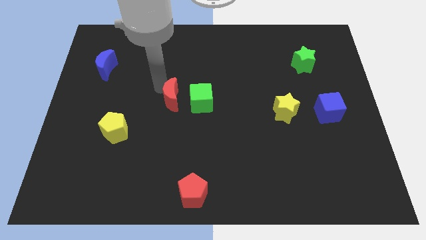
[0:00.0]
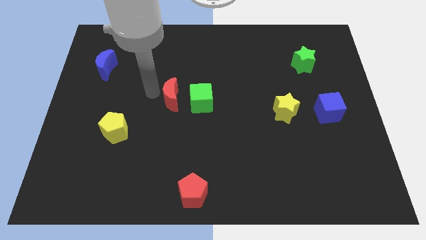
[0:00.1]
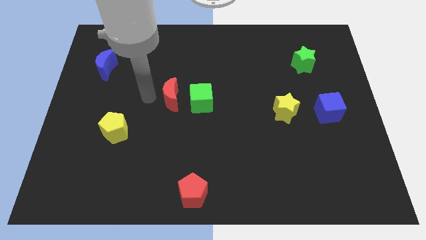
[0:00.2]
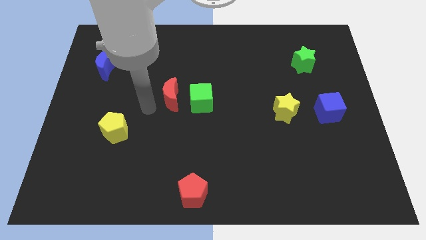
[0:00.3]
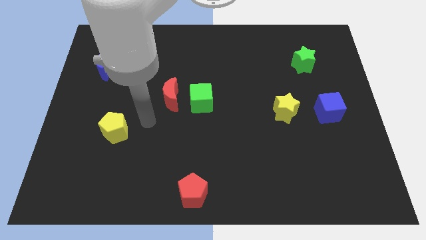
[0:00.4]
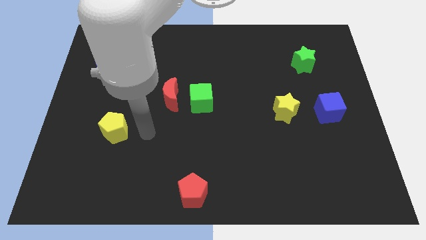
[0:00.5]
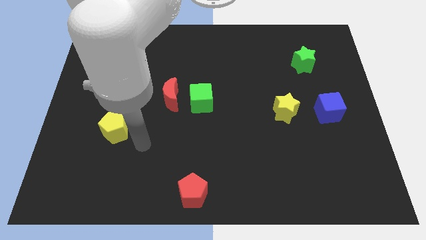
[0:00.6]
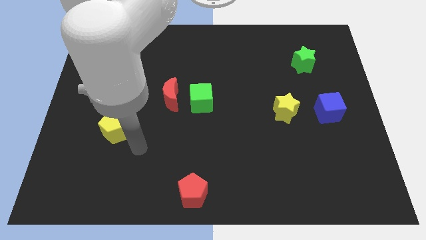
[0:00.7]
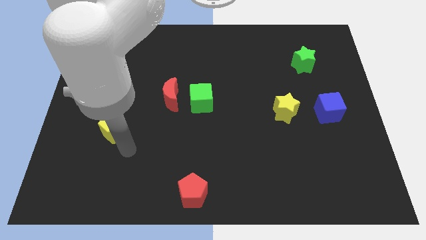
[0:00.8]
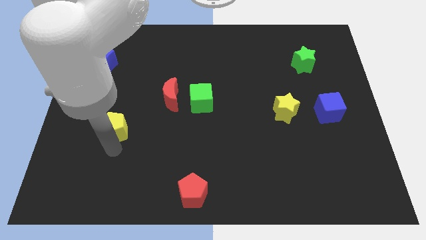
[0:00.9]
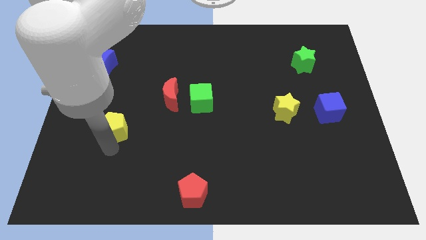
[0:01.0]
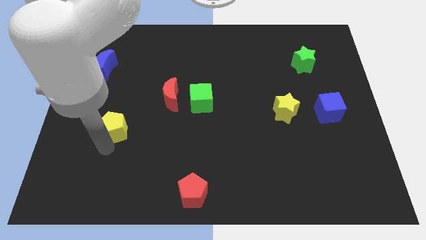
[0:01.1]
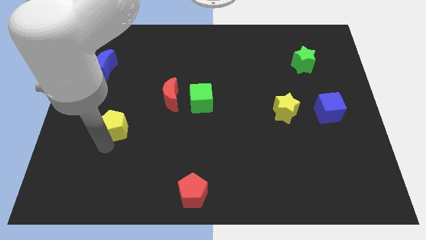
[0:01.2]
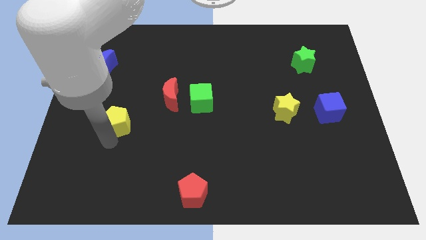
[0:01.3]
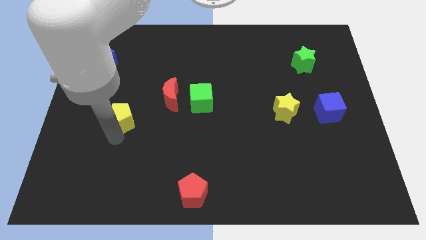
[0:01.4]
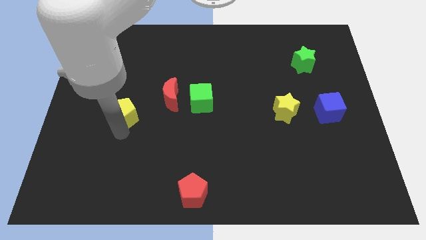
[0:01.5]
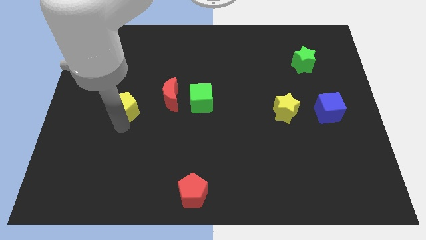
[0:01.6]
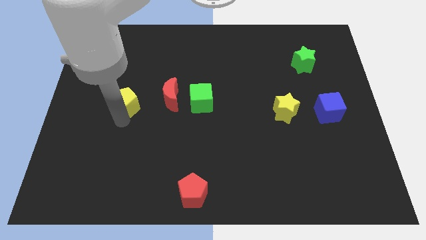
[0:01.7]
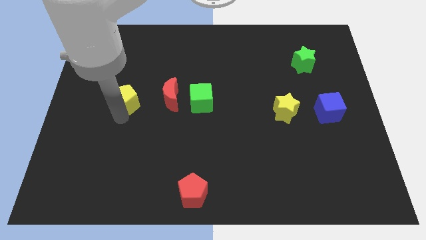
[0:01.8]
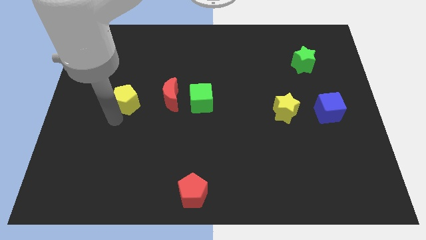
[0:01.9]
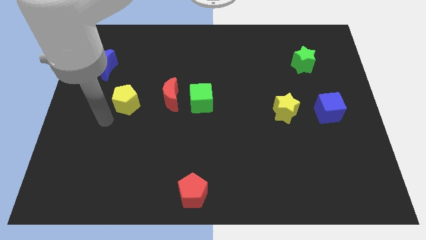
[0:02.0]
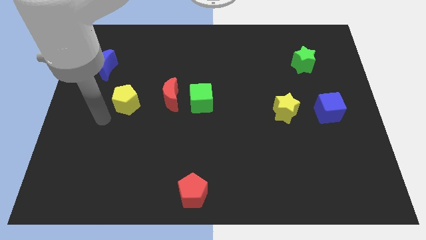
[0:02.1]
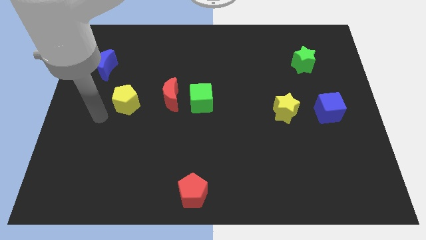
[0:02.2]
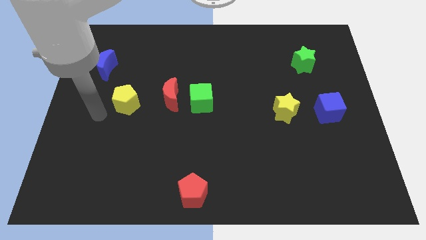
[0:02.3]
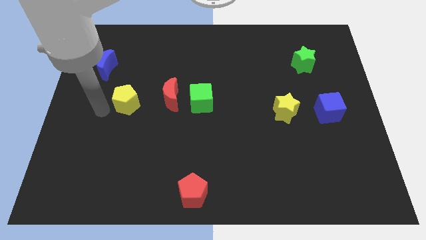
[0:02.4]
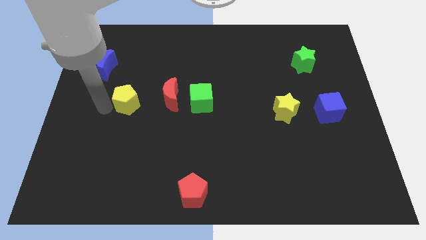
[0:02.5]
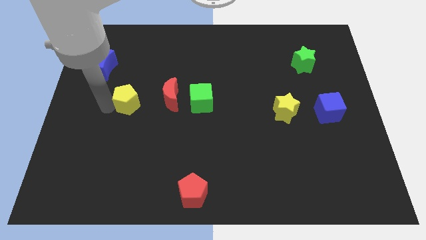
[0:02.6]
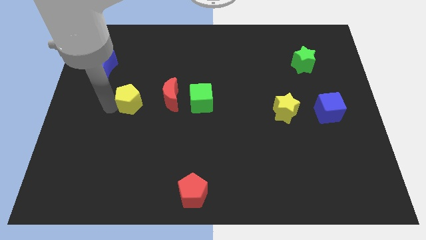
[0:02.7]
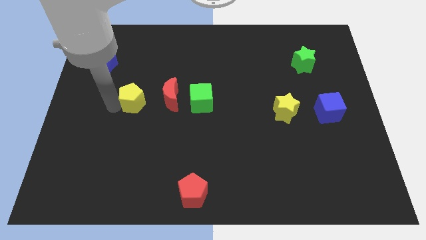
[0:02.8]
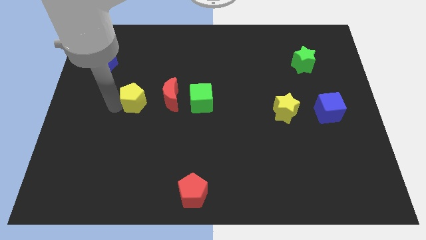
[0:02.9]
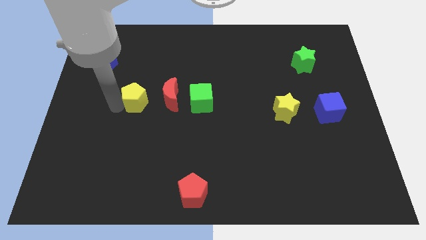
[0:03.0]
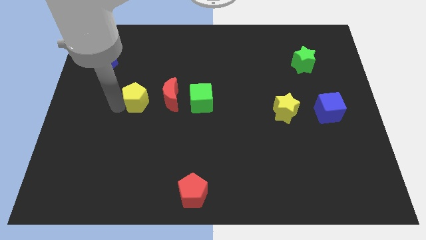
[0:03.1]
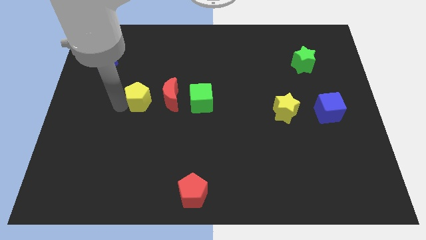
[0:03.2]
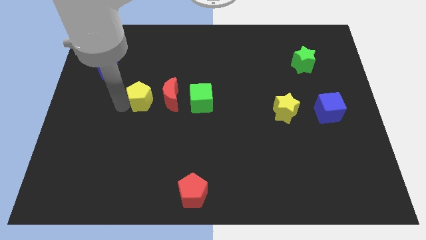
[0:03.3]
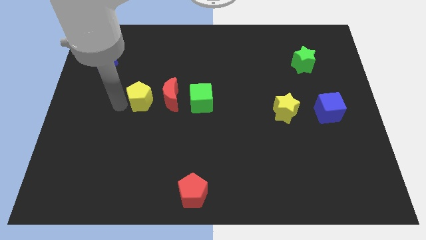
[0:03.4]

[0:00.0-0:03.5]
place the yellow pentagon to the left side of red moon

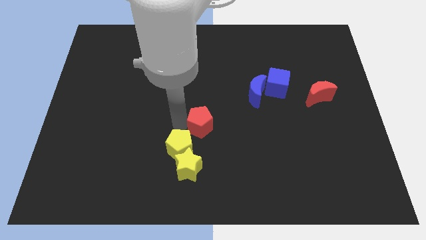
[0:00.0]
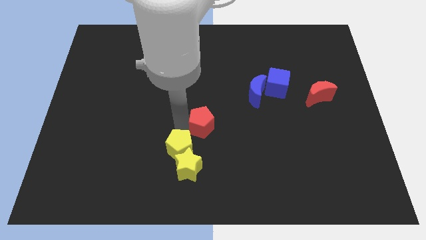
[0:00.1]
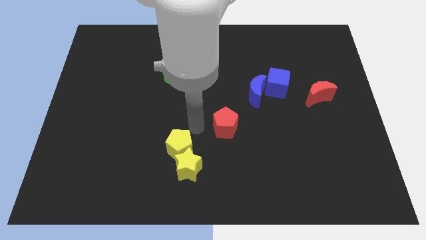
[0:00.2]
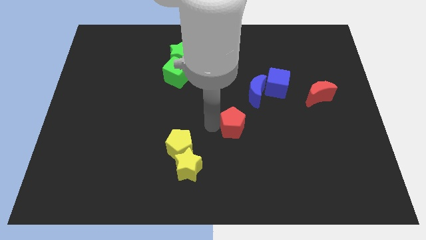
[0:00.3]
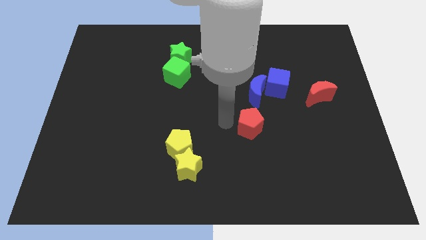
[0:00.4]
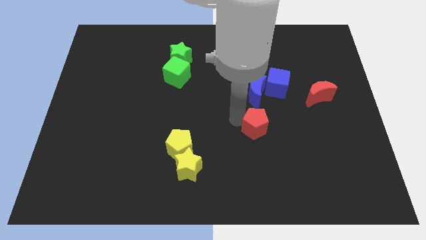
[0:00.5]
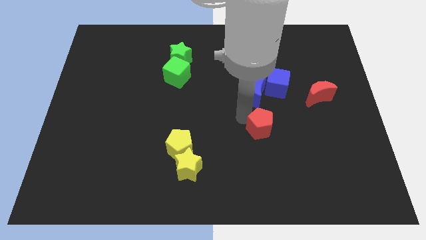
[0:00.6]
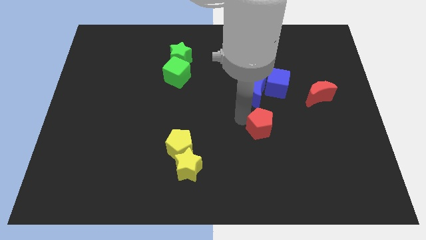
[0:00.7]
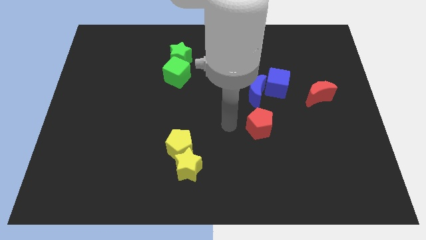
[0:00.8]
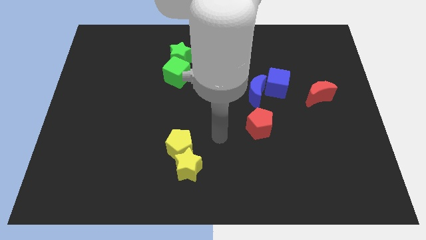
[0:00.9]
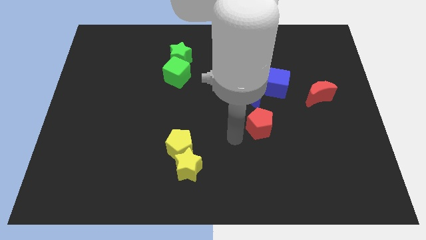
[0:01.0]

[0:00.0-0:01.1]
place red pentagon to the bottom of the blue moon

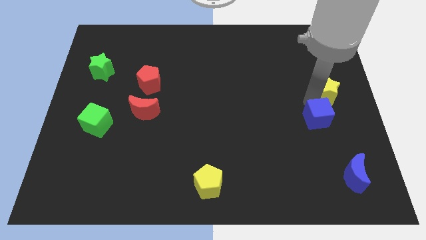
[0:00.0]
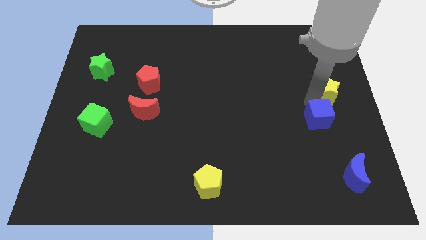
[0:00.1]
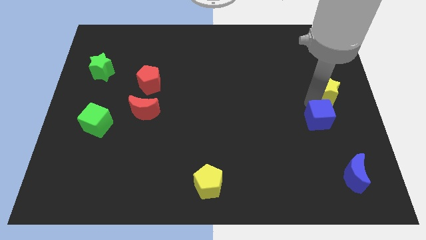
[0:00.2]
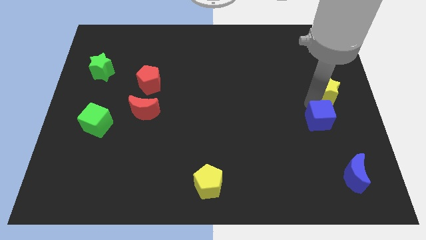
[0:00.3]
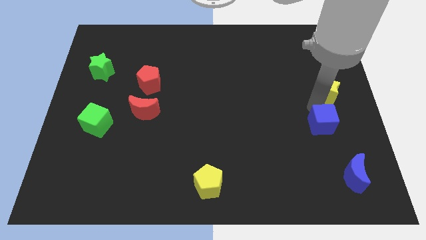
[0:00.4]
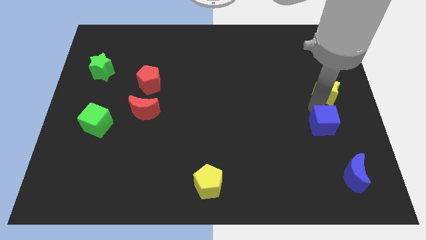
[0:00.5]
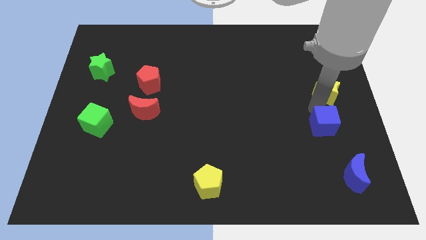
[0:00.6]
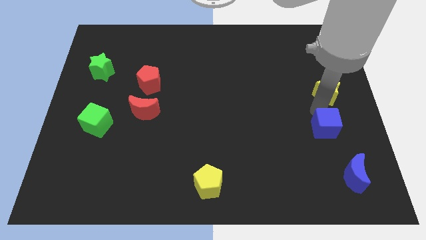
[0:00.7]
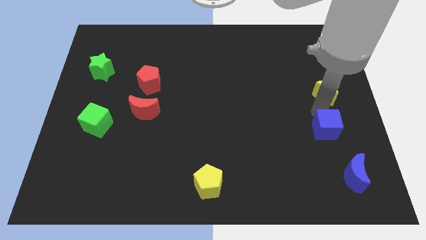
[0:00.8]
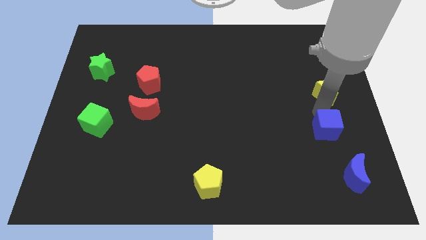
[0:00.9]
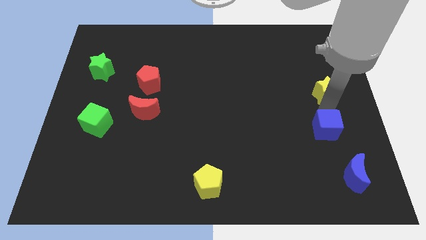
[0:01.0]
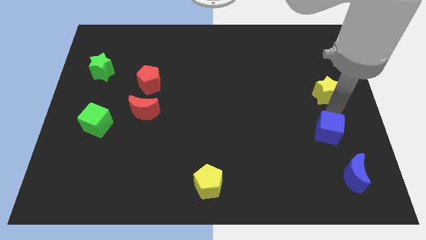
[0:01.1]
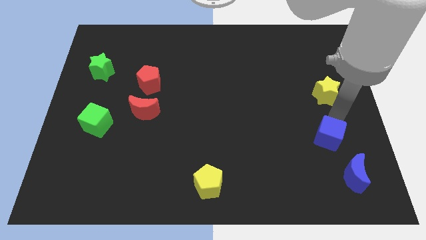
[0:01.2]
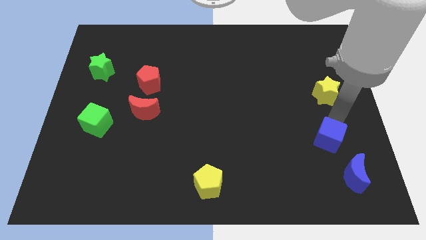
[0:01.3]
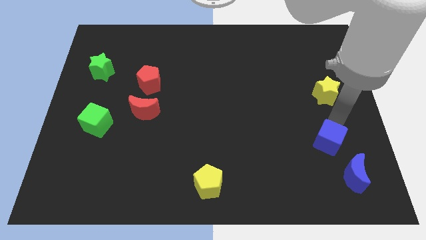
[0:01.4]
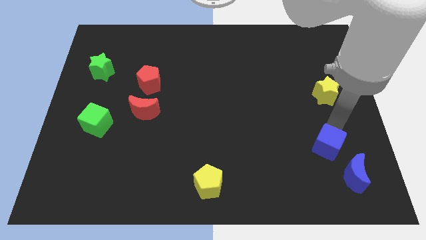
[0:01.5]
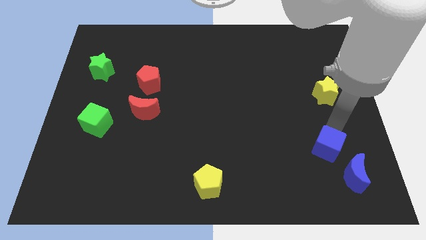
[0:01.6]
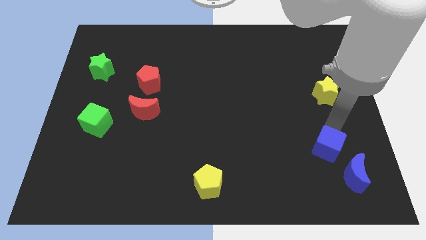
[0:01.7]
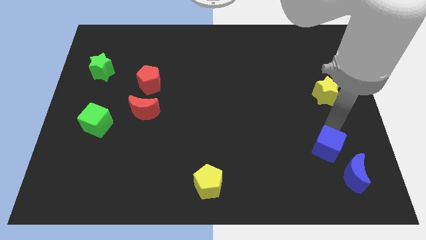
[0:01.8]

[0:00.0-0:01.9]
push the blue cube towards the blue moon

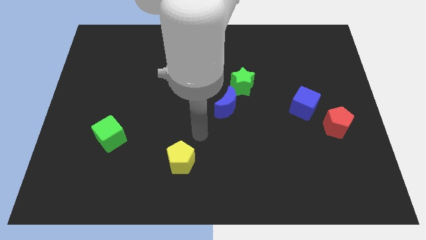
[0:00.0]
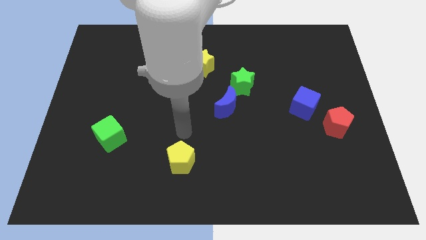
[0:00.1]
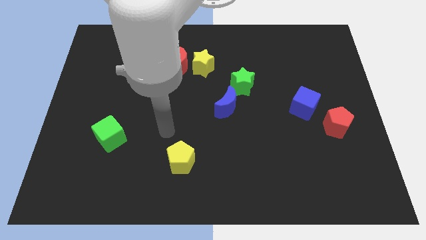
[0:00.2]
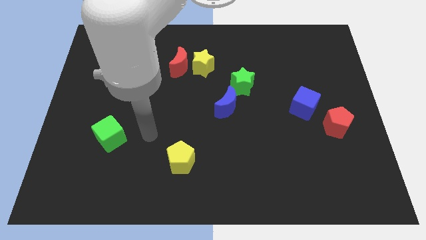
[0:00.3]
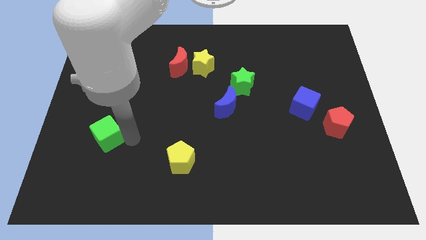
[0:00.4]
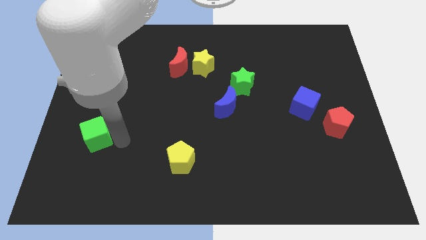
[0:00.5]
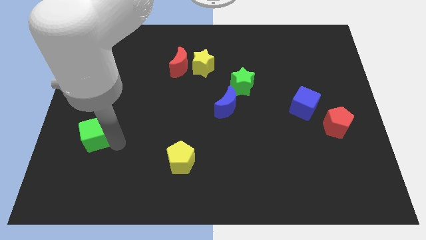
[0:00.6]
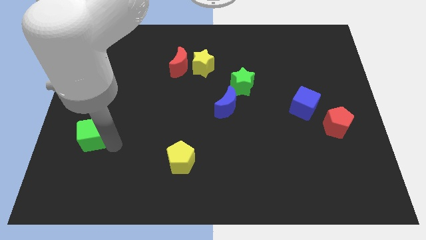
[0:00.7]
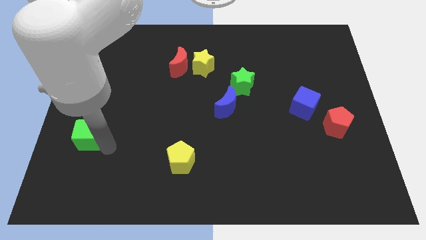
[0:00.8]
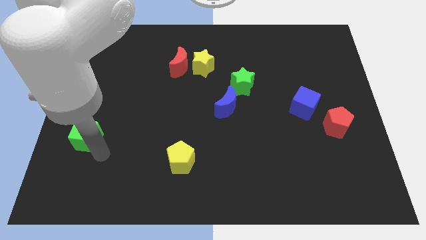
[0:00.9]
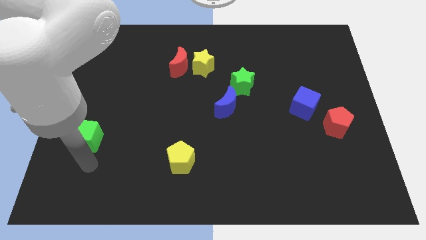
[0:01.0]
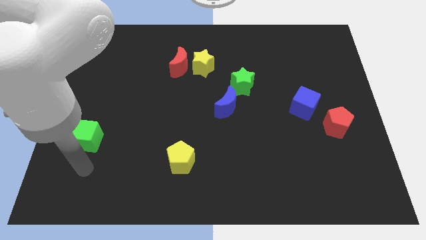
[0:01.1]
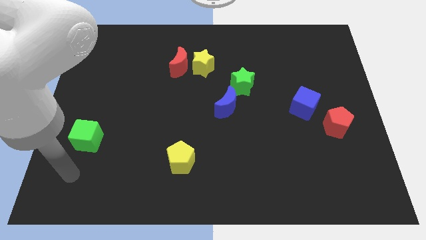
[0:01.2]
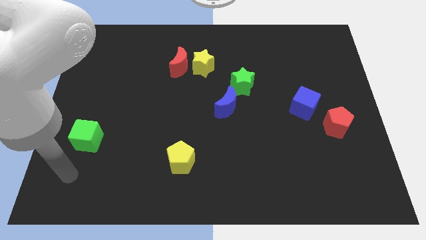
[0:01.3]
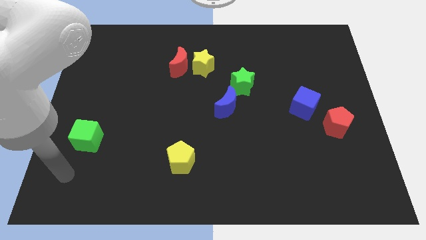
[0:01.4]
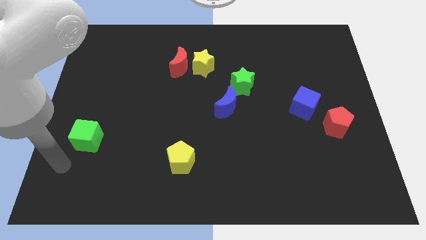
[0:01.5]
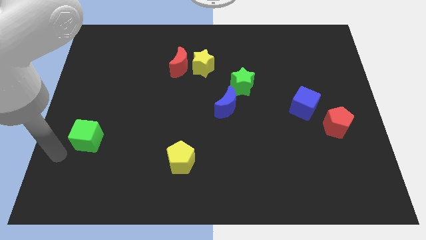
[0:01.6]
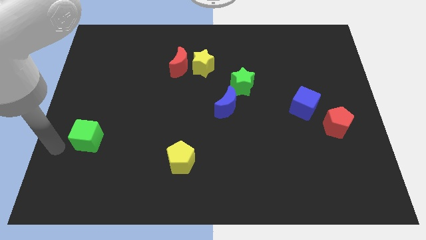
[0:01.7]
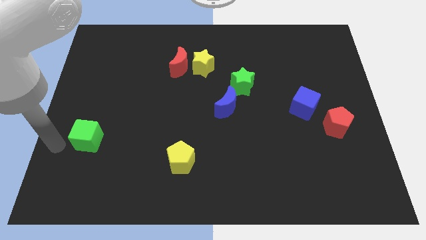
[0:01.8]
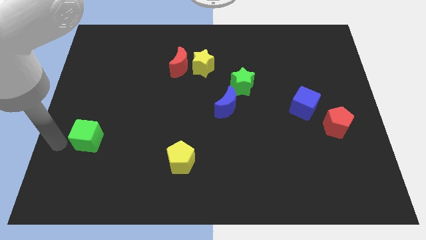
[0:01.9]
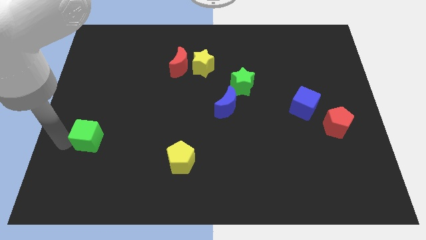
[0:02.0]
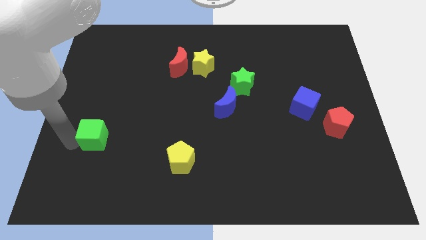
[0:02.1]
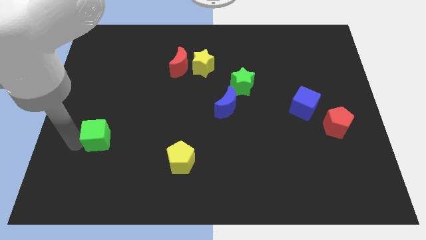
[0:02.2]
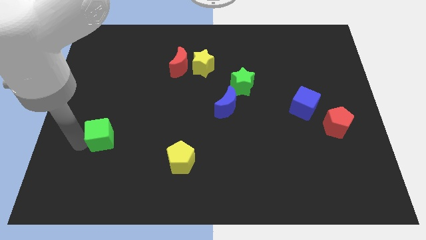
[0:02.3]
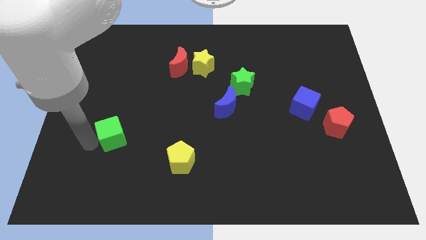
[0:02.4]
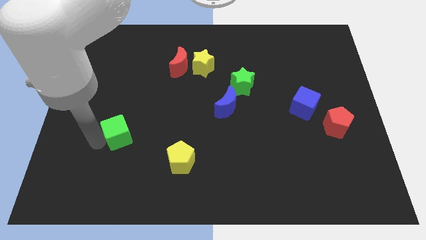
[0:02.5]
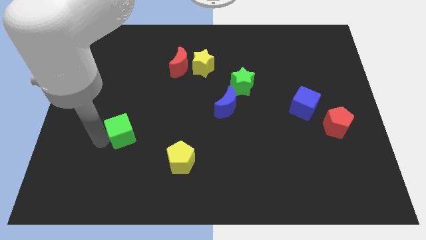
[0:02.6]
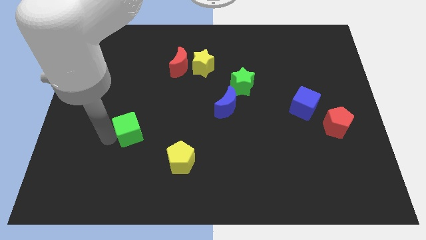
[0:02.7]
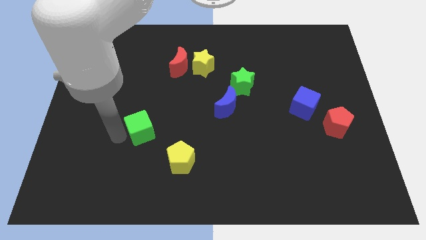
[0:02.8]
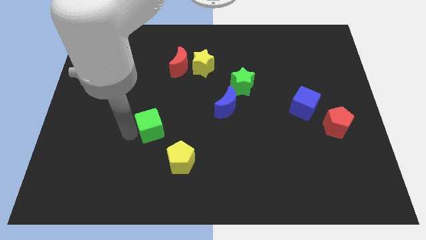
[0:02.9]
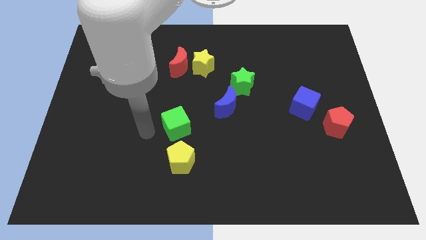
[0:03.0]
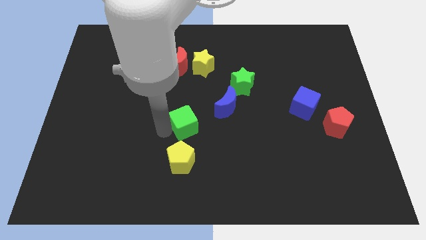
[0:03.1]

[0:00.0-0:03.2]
push the green cube to the top side of the yellow pentagon
